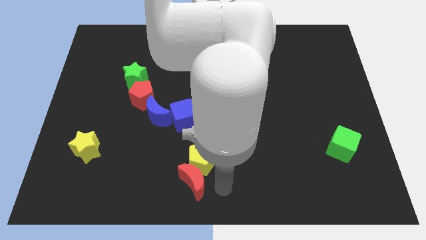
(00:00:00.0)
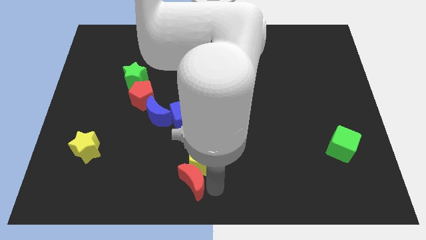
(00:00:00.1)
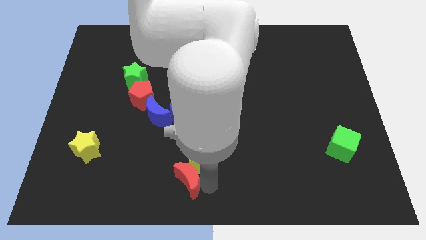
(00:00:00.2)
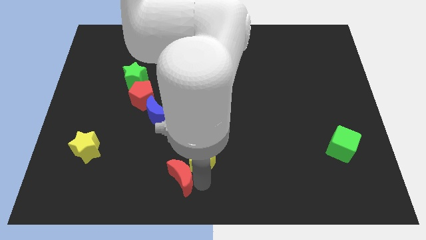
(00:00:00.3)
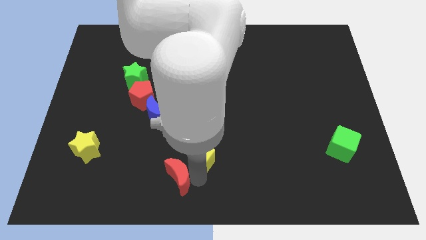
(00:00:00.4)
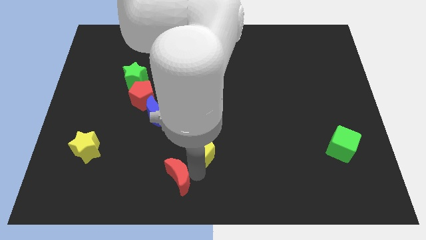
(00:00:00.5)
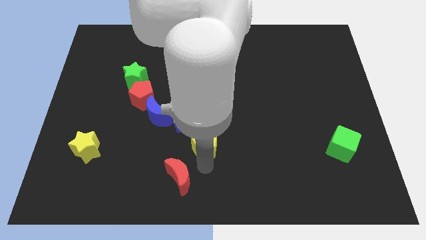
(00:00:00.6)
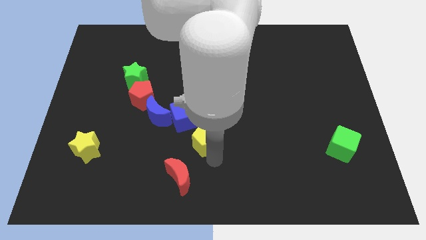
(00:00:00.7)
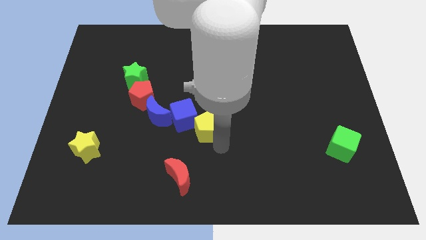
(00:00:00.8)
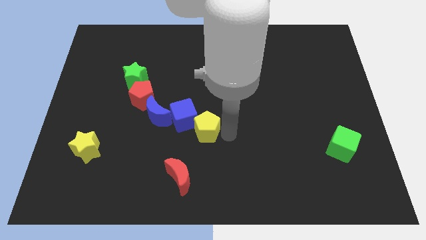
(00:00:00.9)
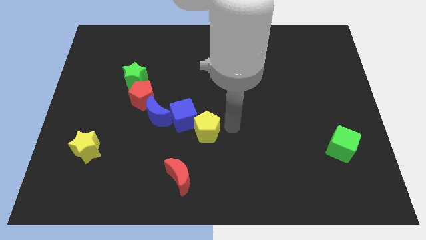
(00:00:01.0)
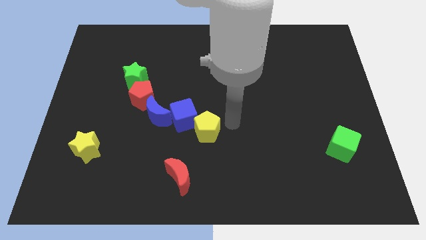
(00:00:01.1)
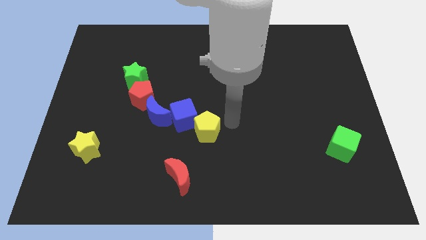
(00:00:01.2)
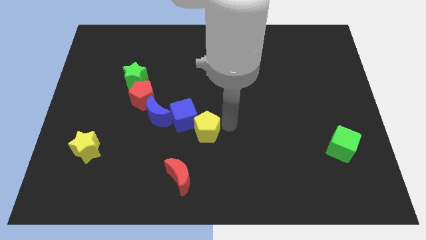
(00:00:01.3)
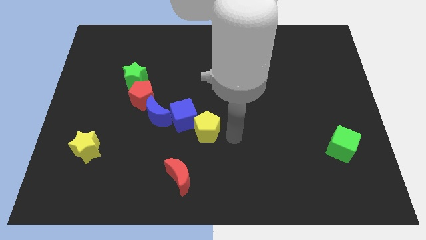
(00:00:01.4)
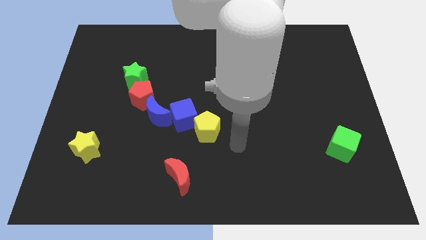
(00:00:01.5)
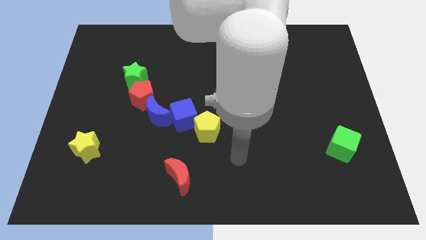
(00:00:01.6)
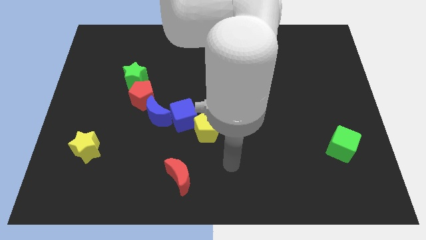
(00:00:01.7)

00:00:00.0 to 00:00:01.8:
slide yellow pentagon into blue cube

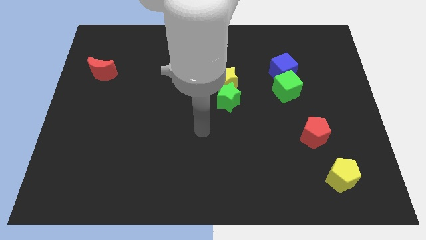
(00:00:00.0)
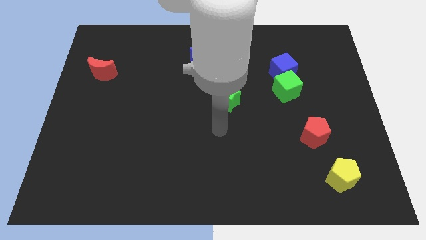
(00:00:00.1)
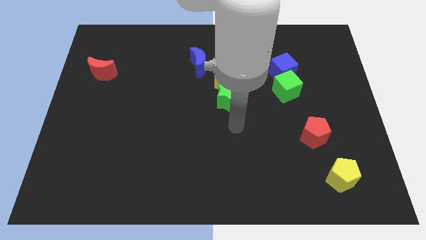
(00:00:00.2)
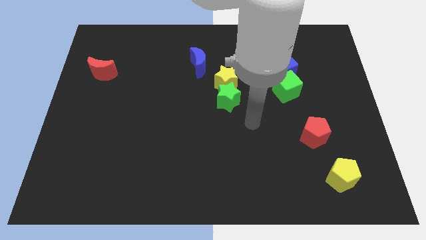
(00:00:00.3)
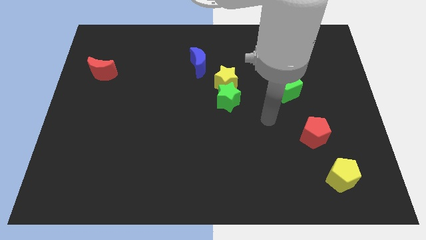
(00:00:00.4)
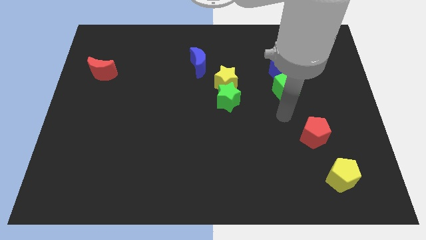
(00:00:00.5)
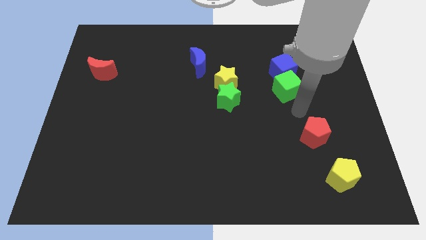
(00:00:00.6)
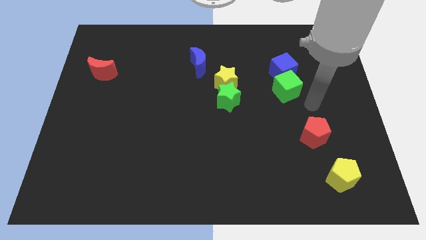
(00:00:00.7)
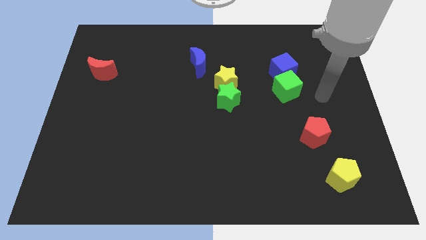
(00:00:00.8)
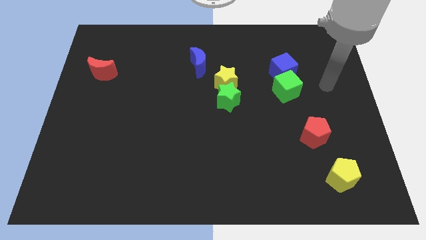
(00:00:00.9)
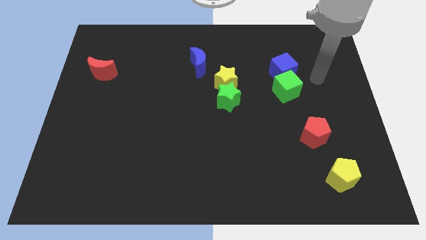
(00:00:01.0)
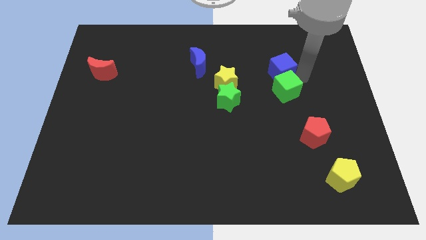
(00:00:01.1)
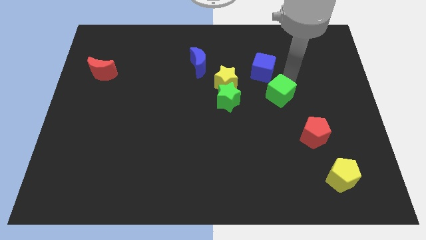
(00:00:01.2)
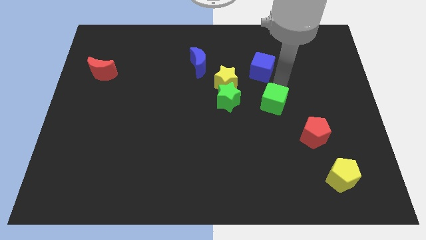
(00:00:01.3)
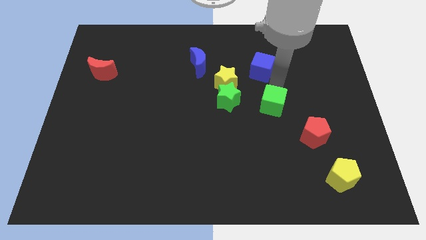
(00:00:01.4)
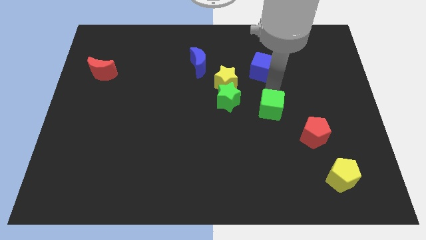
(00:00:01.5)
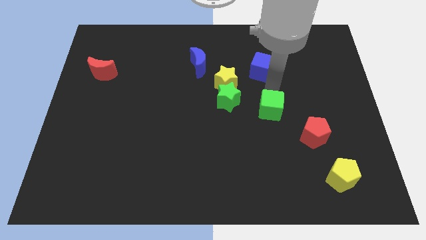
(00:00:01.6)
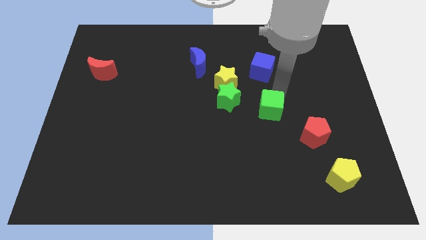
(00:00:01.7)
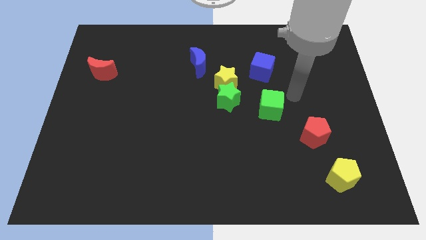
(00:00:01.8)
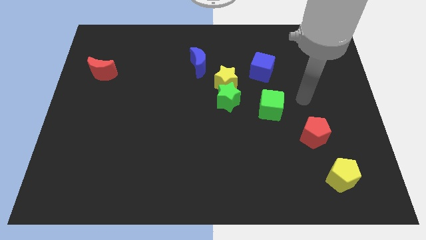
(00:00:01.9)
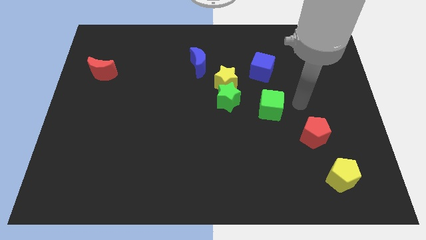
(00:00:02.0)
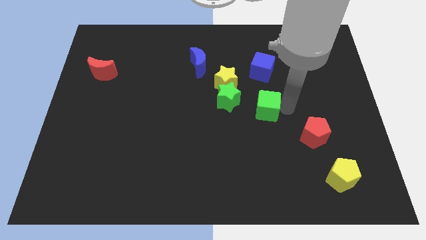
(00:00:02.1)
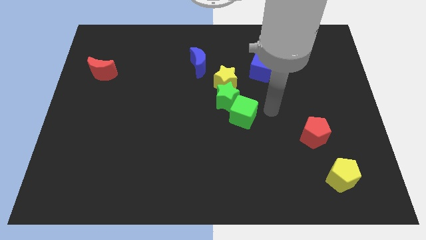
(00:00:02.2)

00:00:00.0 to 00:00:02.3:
separate the green cube towards the green star

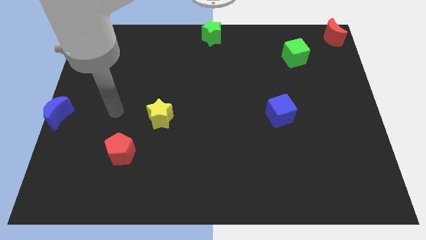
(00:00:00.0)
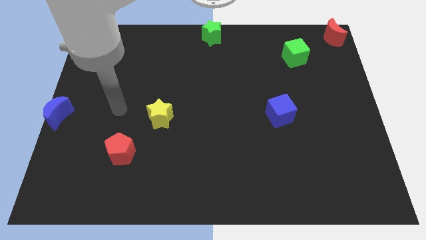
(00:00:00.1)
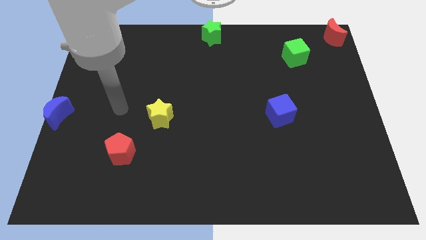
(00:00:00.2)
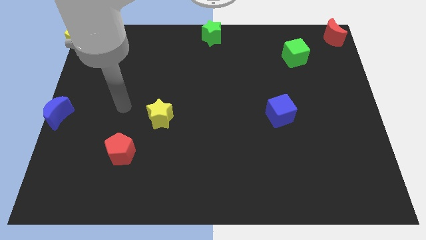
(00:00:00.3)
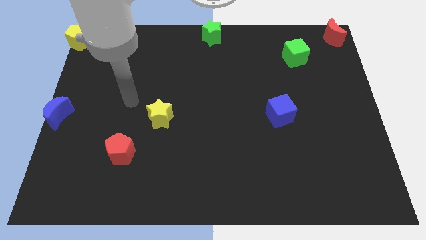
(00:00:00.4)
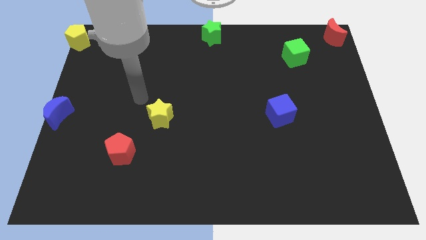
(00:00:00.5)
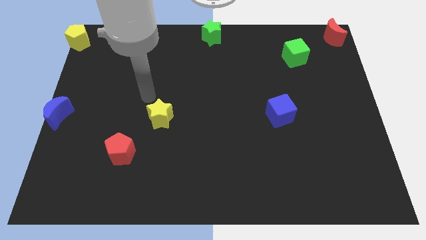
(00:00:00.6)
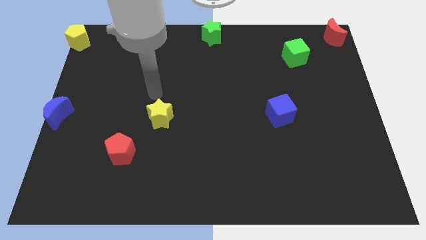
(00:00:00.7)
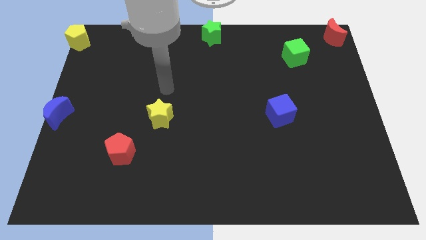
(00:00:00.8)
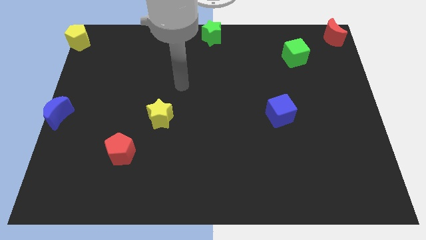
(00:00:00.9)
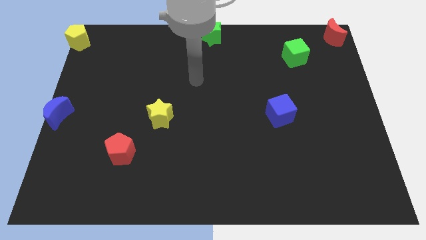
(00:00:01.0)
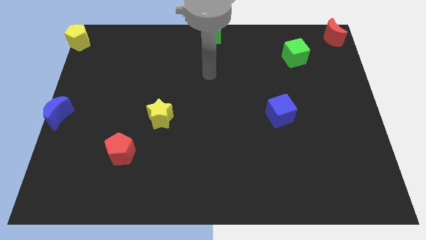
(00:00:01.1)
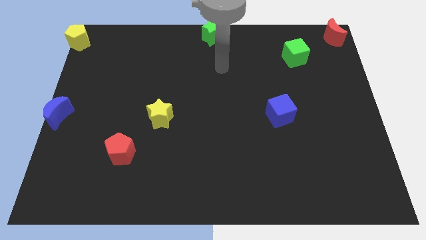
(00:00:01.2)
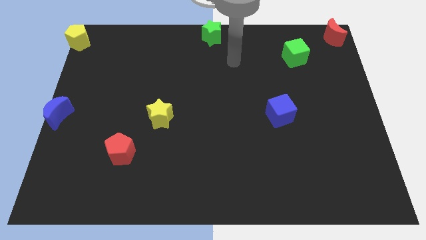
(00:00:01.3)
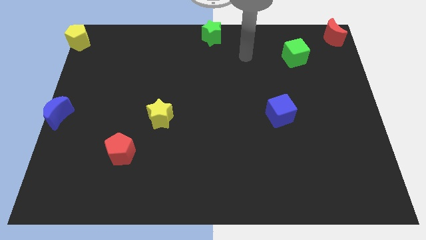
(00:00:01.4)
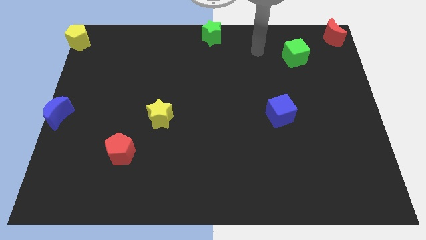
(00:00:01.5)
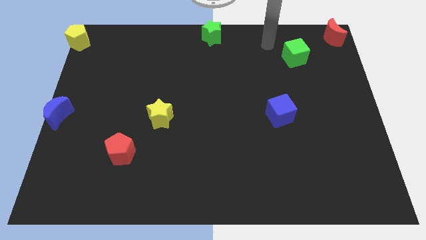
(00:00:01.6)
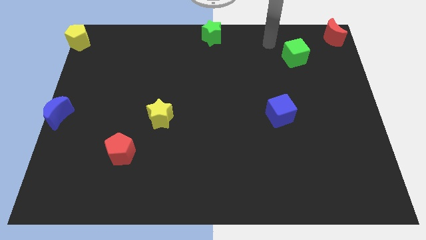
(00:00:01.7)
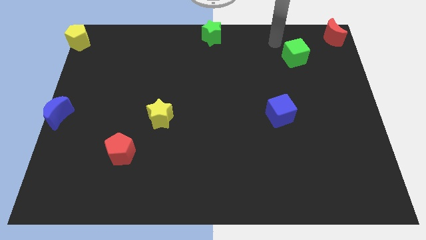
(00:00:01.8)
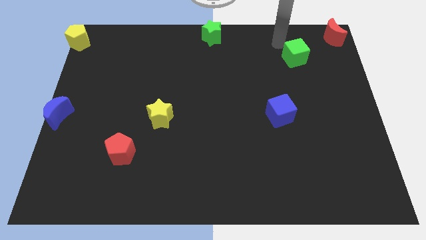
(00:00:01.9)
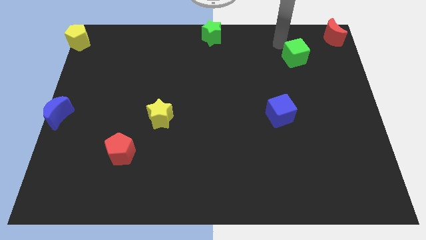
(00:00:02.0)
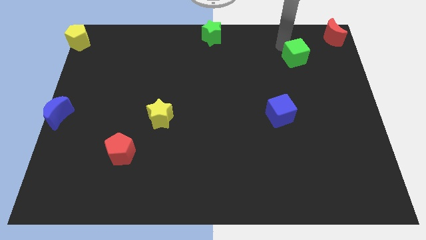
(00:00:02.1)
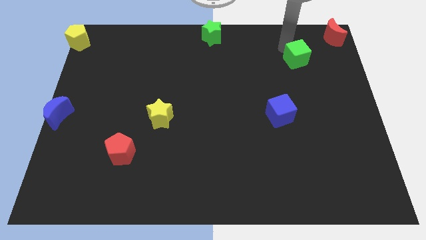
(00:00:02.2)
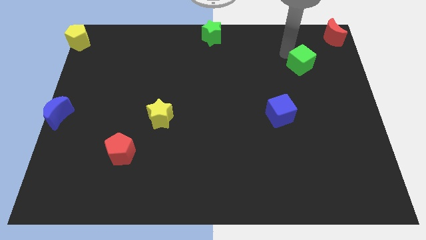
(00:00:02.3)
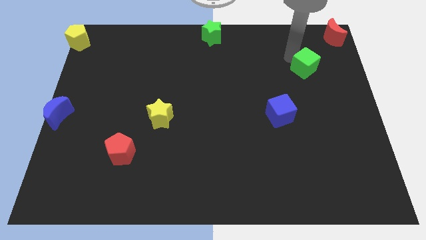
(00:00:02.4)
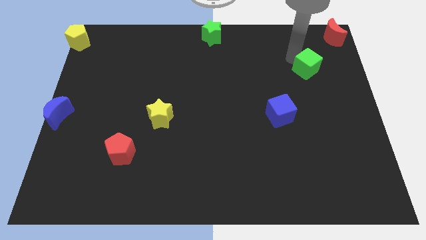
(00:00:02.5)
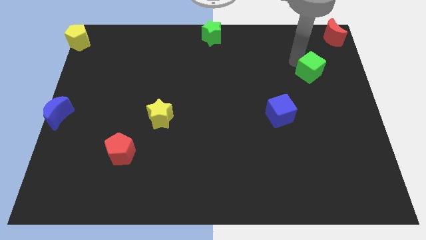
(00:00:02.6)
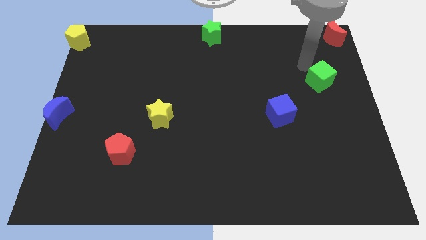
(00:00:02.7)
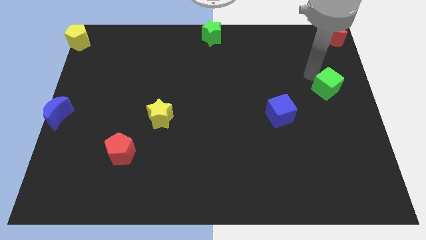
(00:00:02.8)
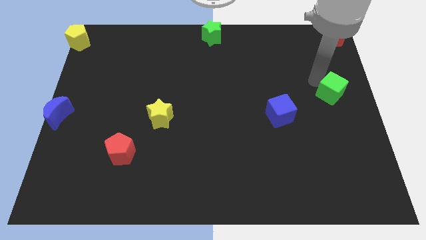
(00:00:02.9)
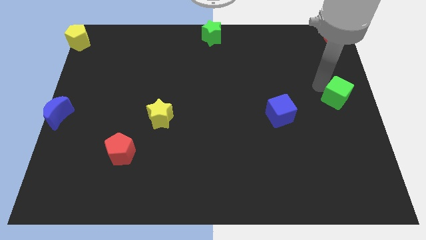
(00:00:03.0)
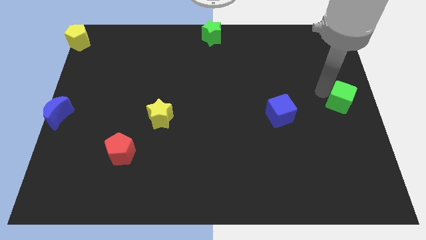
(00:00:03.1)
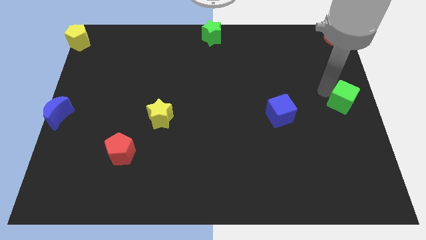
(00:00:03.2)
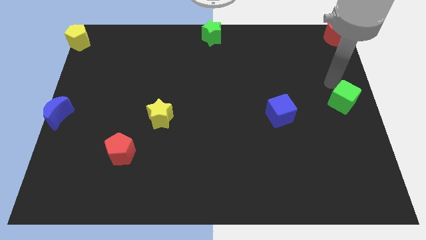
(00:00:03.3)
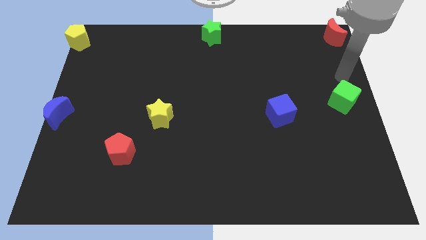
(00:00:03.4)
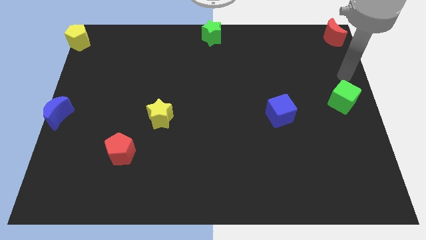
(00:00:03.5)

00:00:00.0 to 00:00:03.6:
place the green cube at the right center of the board

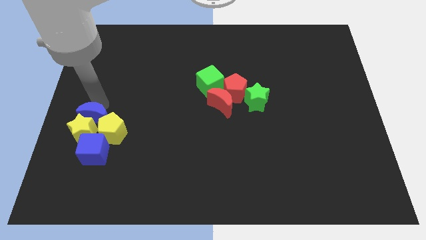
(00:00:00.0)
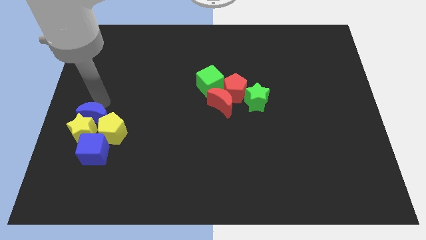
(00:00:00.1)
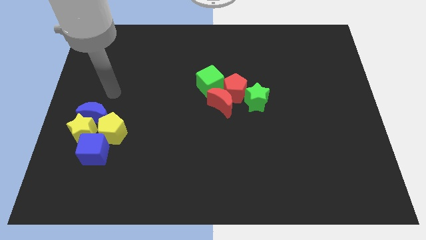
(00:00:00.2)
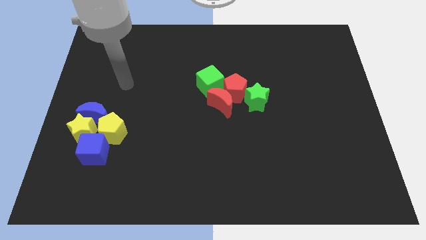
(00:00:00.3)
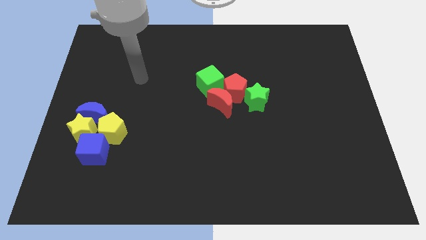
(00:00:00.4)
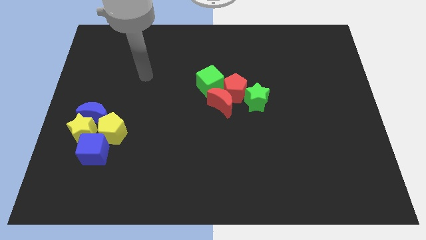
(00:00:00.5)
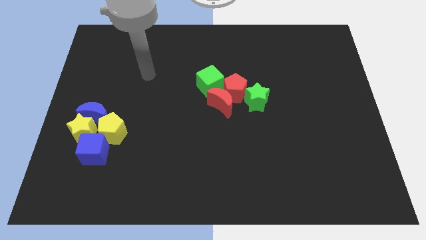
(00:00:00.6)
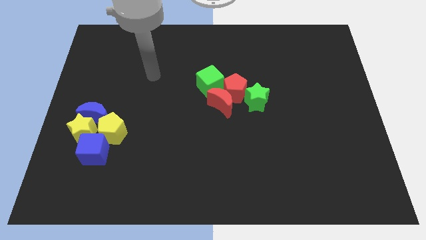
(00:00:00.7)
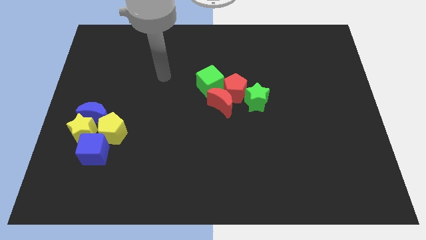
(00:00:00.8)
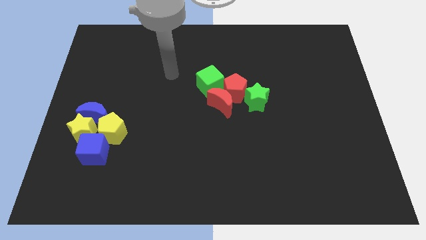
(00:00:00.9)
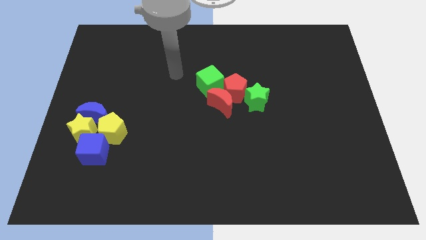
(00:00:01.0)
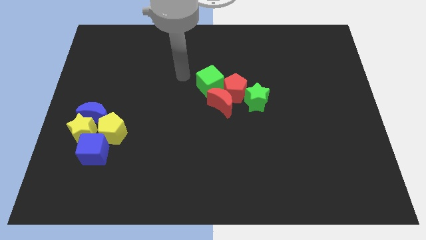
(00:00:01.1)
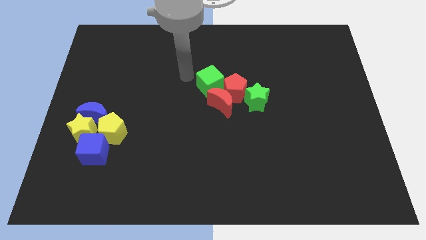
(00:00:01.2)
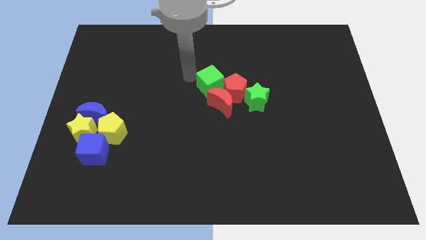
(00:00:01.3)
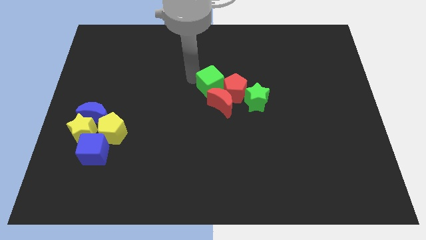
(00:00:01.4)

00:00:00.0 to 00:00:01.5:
move your arm towards the green cube
